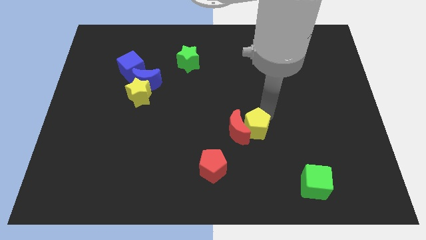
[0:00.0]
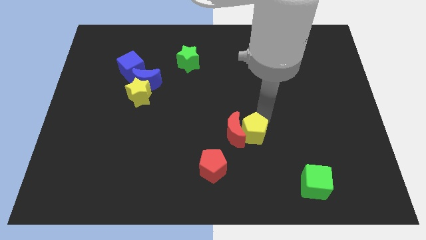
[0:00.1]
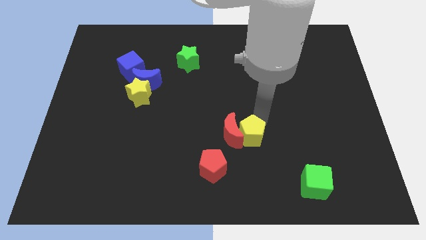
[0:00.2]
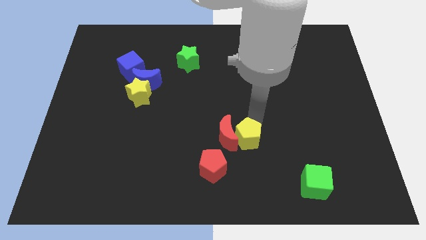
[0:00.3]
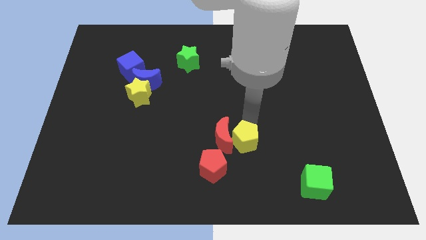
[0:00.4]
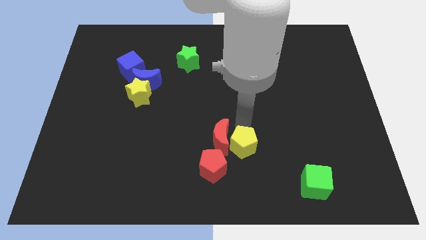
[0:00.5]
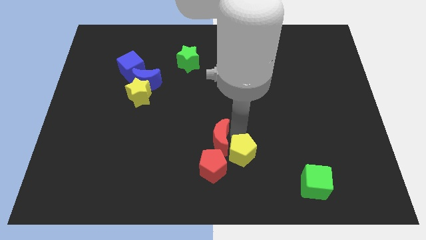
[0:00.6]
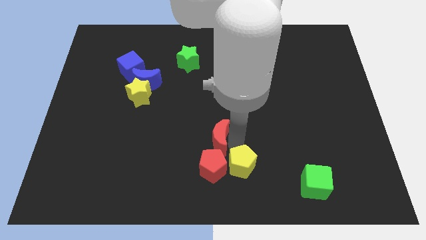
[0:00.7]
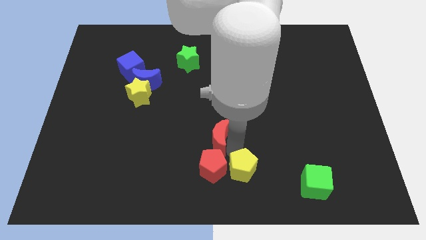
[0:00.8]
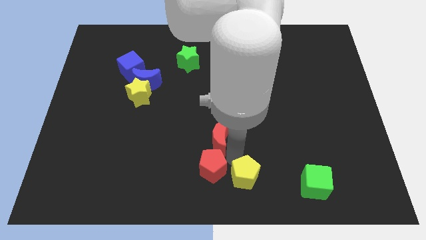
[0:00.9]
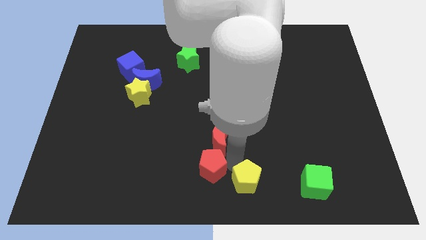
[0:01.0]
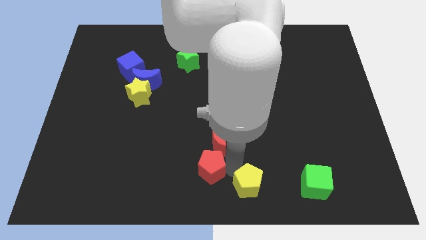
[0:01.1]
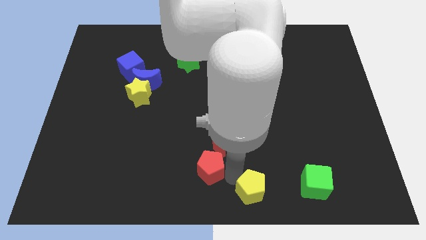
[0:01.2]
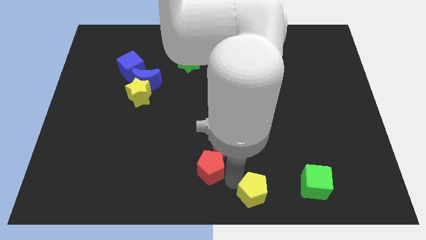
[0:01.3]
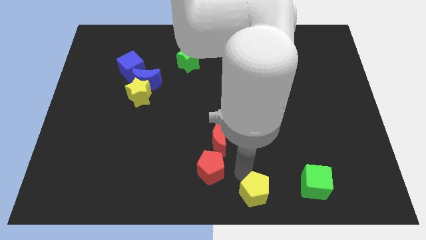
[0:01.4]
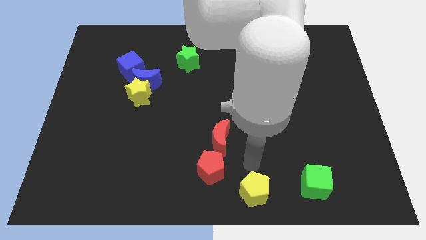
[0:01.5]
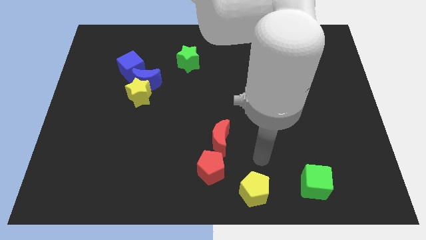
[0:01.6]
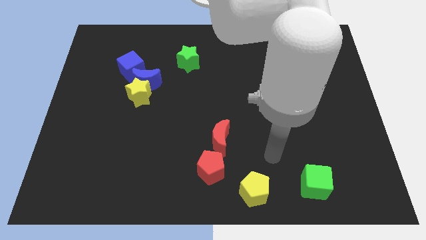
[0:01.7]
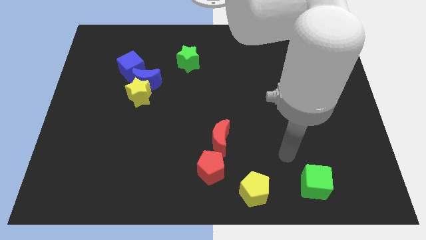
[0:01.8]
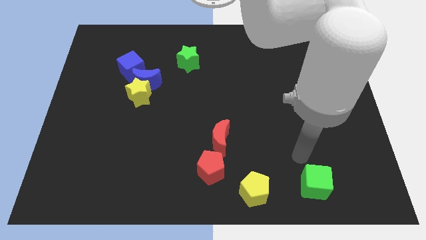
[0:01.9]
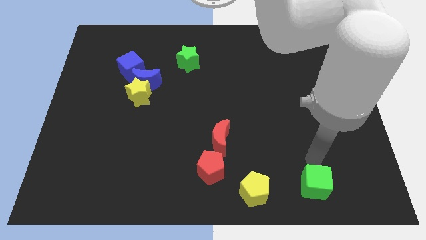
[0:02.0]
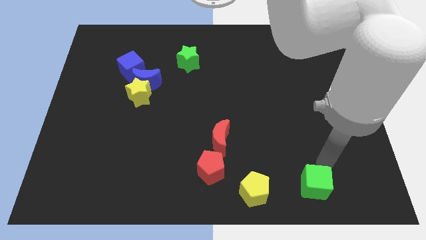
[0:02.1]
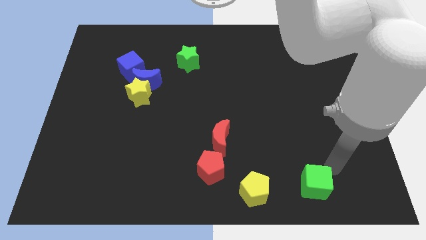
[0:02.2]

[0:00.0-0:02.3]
push the yellow pentagon towards the bottom

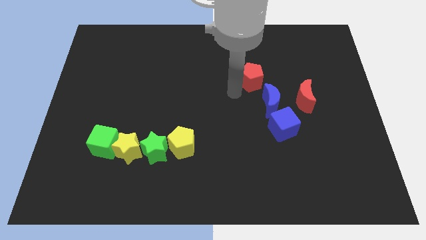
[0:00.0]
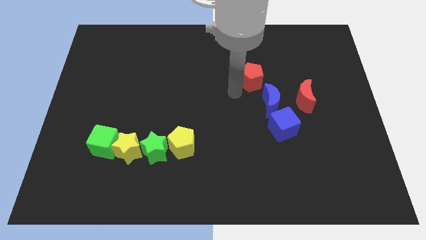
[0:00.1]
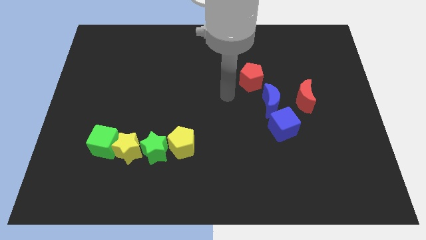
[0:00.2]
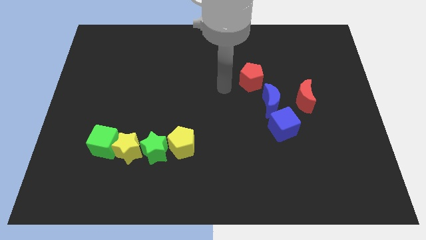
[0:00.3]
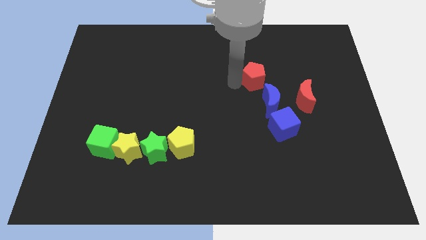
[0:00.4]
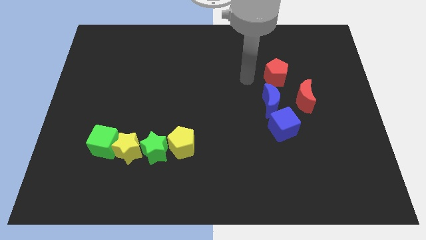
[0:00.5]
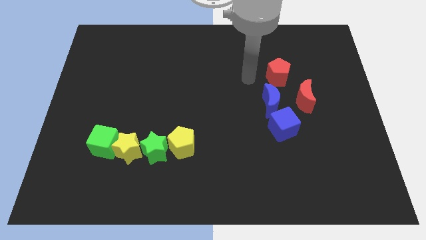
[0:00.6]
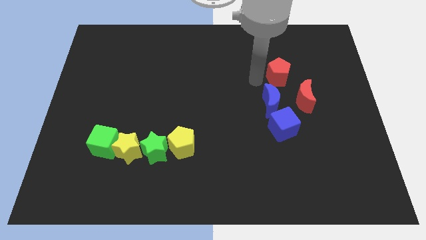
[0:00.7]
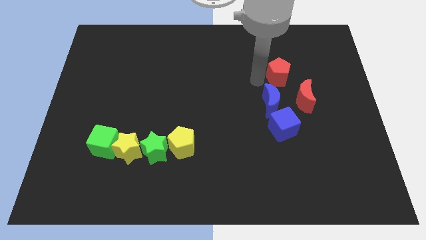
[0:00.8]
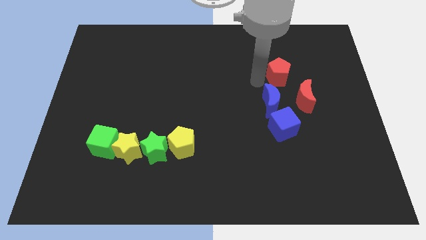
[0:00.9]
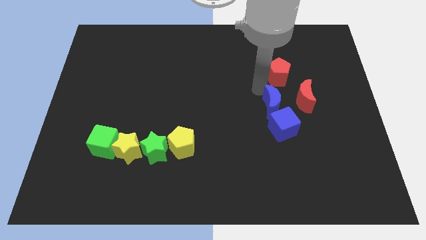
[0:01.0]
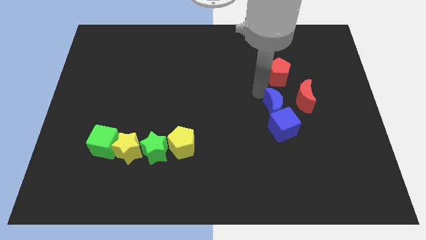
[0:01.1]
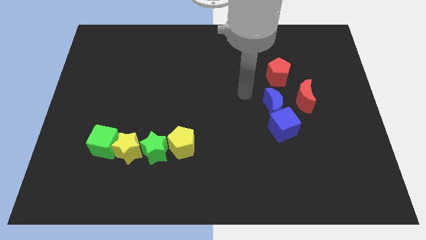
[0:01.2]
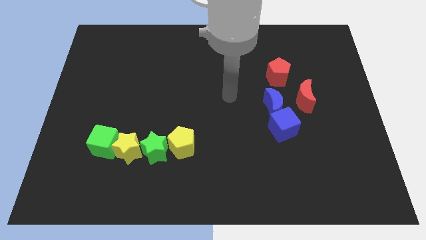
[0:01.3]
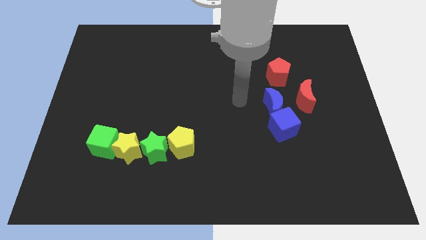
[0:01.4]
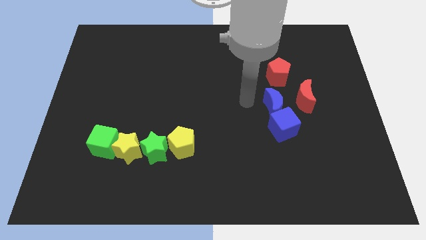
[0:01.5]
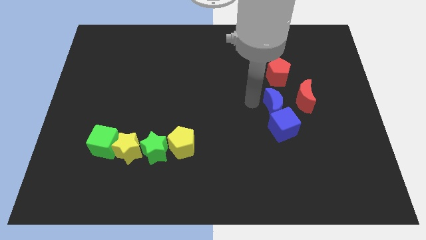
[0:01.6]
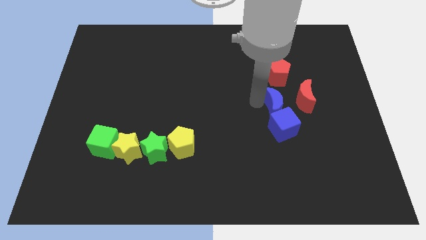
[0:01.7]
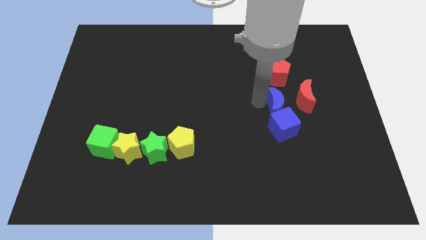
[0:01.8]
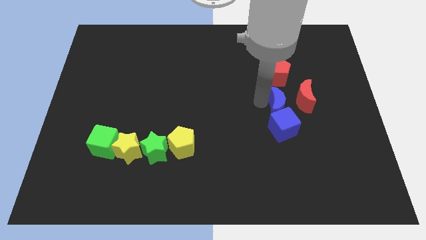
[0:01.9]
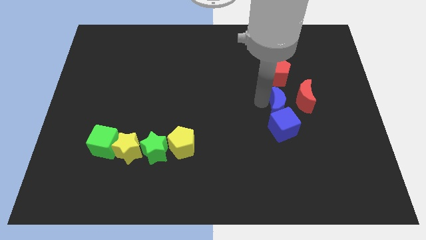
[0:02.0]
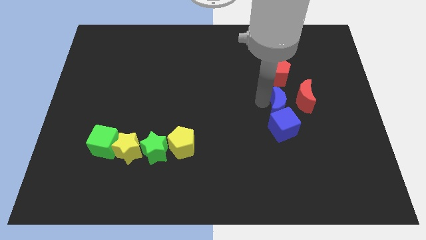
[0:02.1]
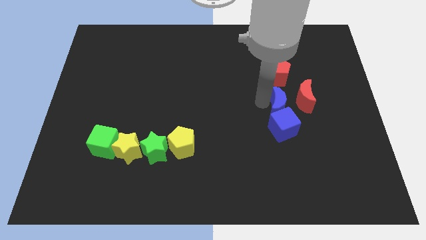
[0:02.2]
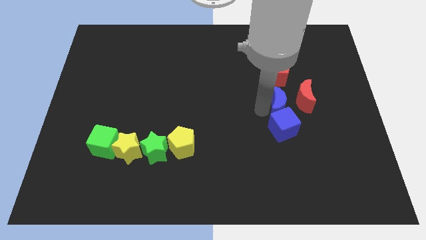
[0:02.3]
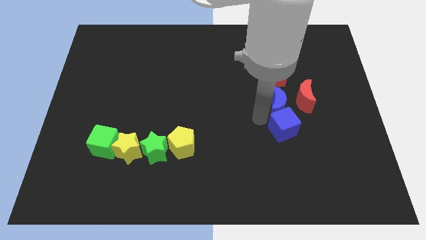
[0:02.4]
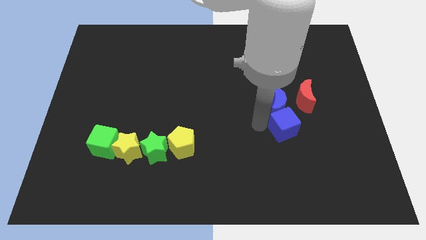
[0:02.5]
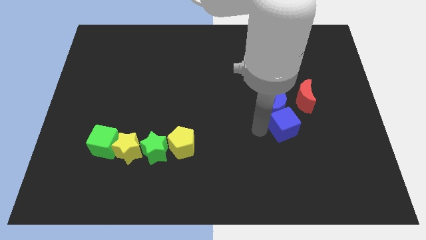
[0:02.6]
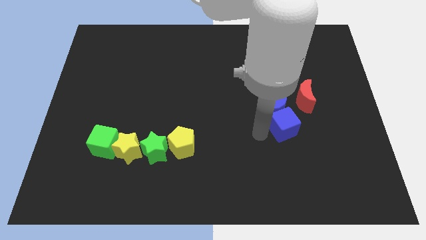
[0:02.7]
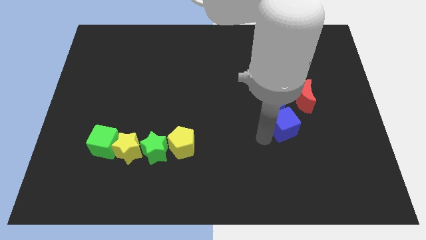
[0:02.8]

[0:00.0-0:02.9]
push red pentagon blue moon blue cube to the right

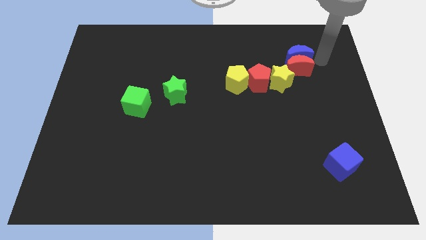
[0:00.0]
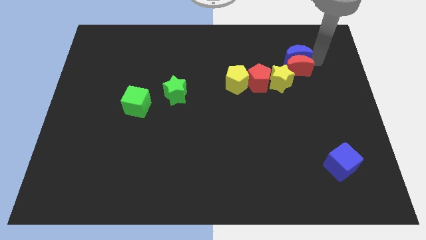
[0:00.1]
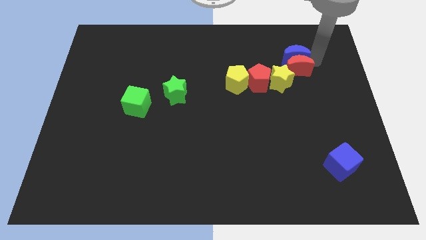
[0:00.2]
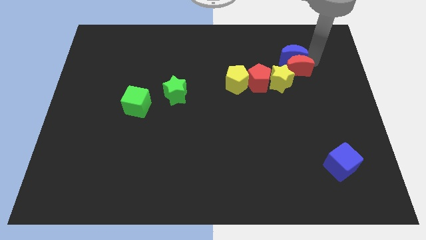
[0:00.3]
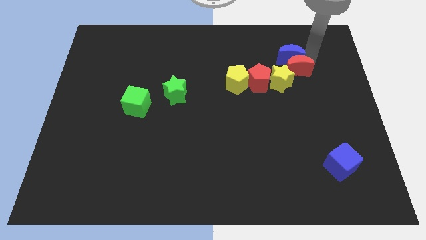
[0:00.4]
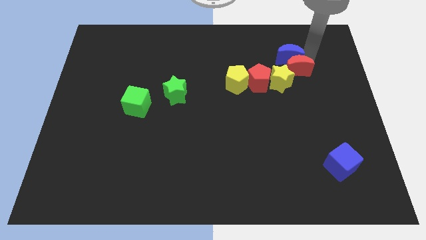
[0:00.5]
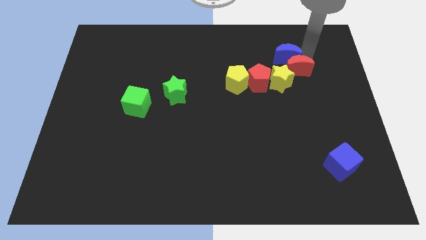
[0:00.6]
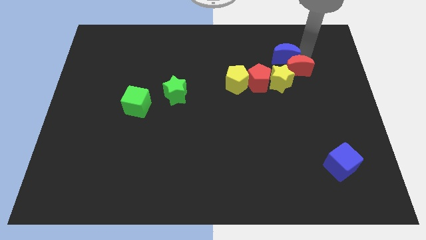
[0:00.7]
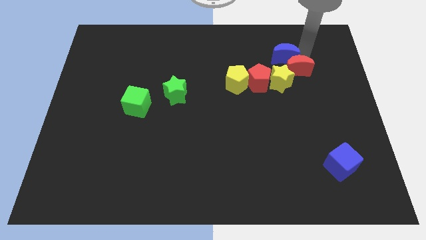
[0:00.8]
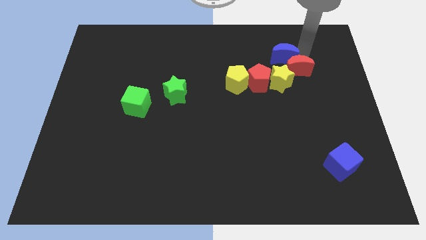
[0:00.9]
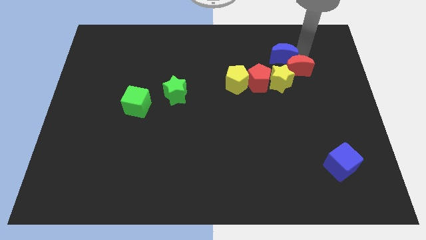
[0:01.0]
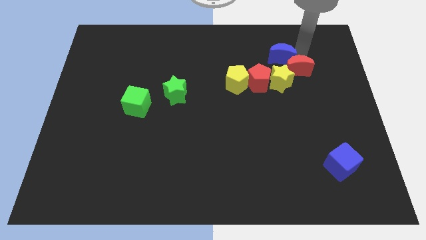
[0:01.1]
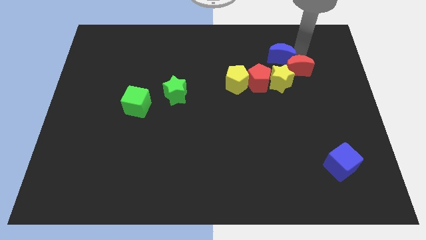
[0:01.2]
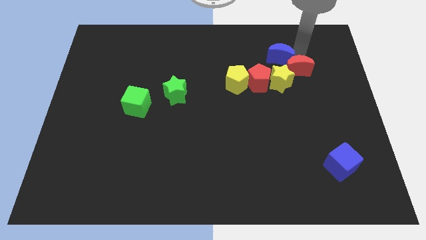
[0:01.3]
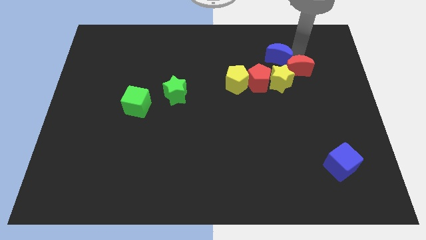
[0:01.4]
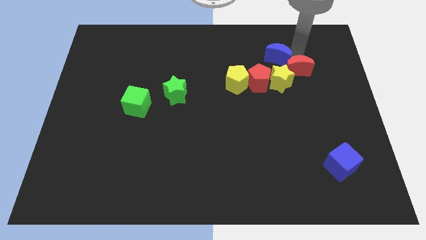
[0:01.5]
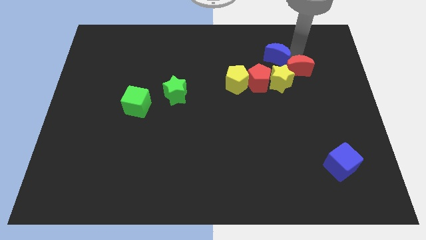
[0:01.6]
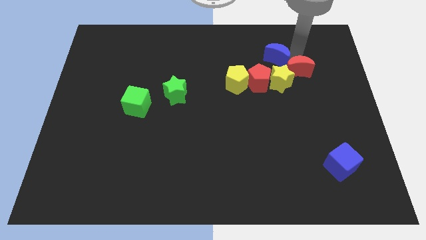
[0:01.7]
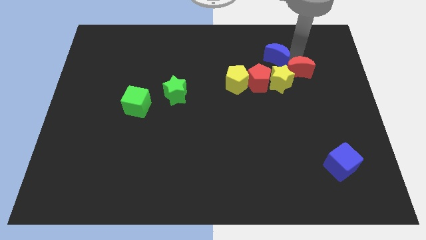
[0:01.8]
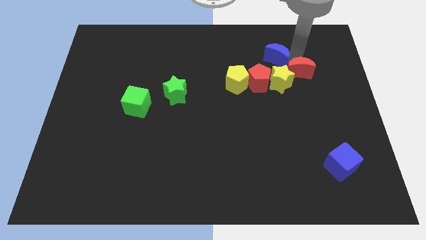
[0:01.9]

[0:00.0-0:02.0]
move blue crescent slightly left side of the board

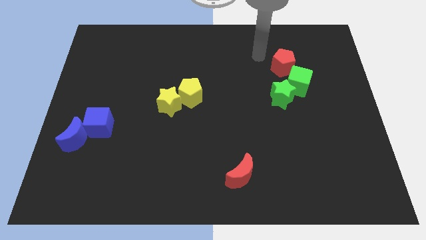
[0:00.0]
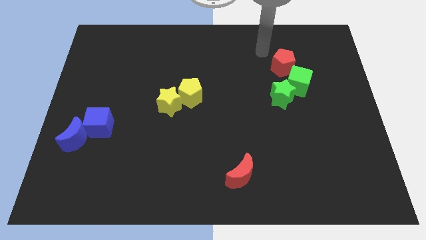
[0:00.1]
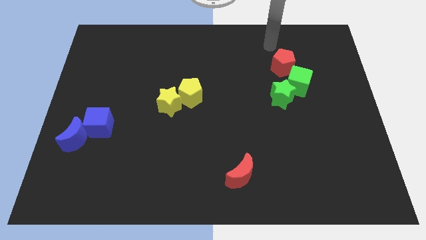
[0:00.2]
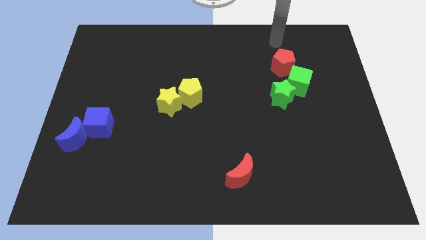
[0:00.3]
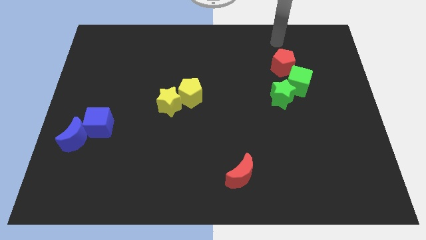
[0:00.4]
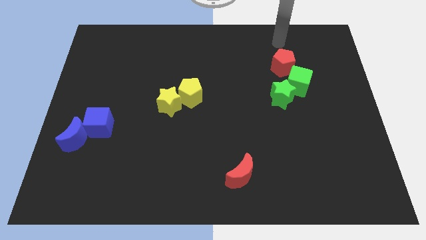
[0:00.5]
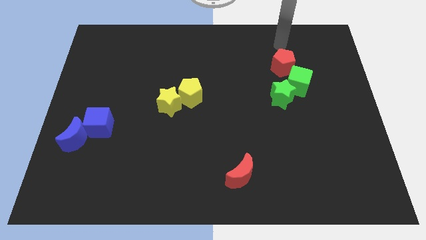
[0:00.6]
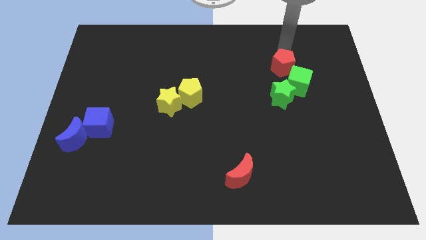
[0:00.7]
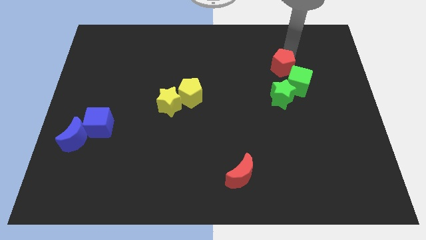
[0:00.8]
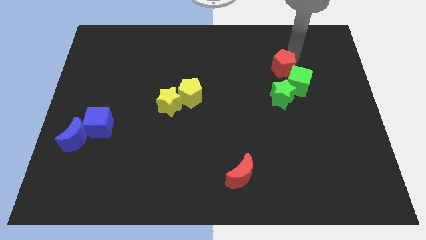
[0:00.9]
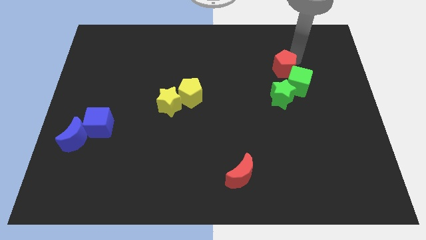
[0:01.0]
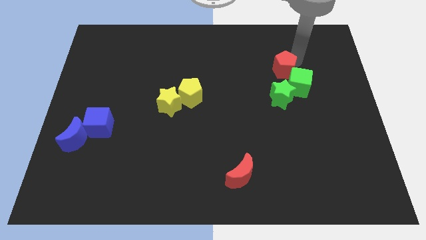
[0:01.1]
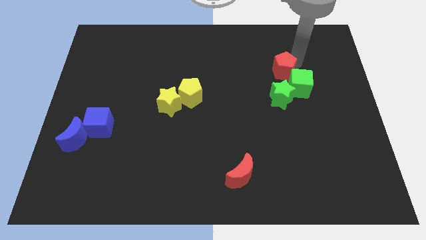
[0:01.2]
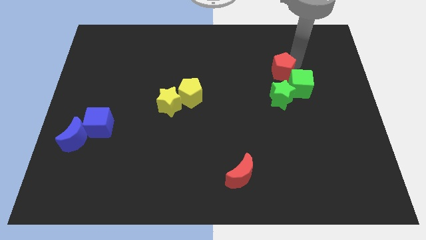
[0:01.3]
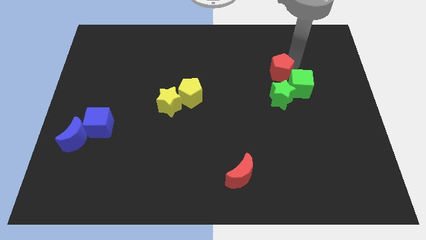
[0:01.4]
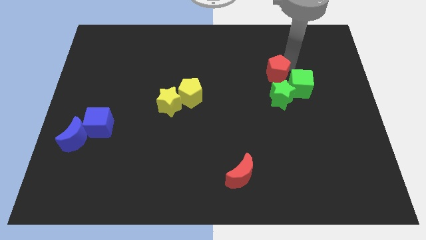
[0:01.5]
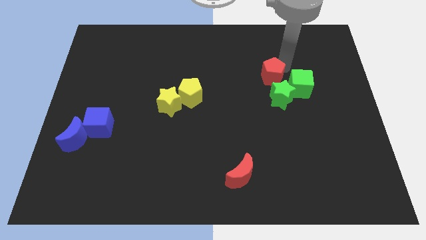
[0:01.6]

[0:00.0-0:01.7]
move the red pentagon into green blocks
